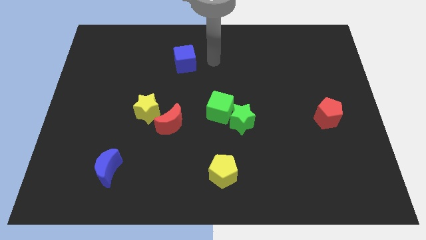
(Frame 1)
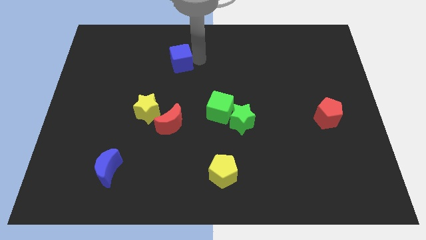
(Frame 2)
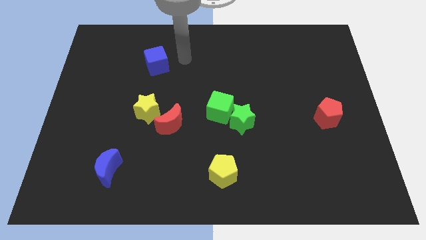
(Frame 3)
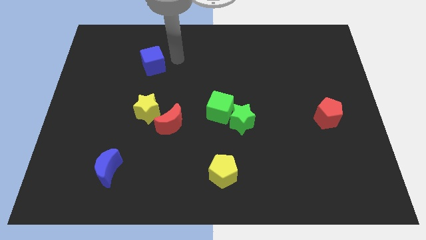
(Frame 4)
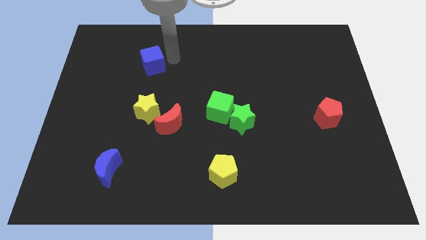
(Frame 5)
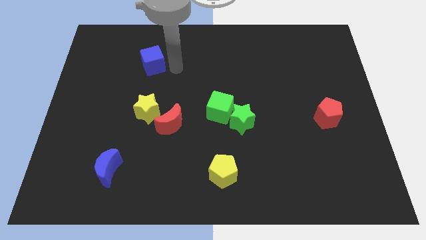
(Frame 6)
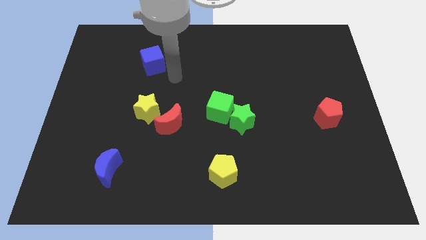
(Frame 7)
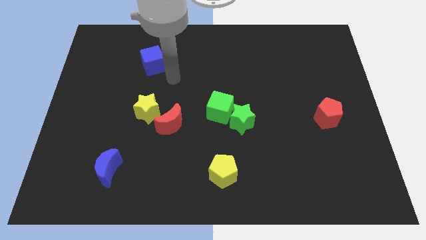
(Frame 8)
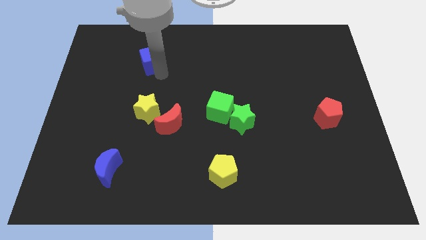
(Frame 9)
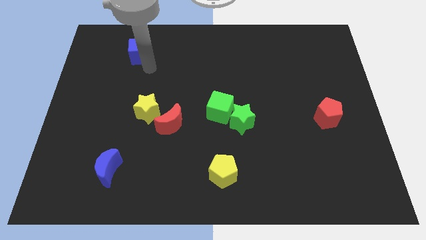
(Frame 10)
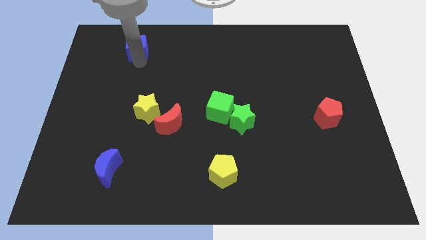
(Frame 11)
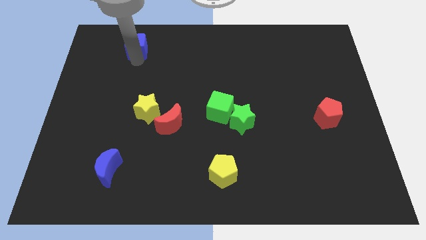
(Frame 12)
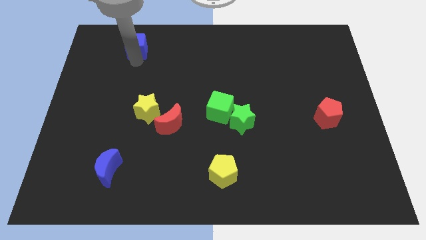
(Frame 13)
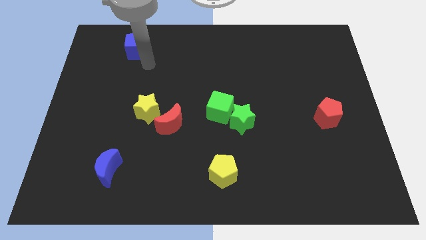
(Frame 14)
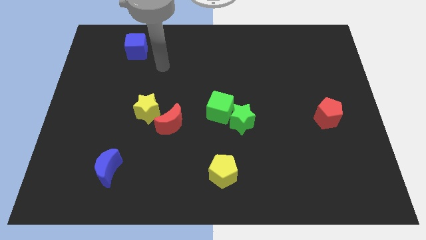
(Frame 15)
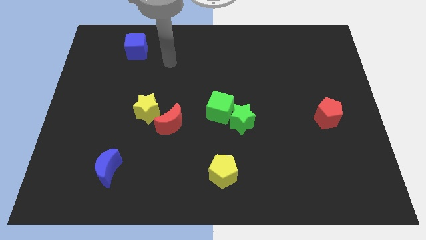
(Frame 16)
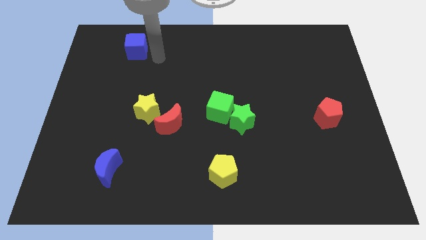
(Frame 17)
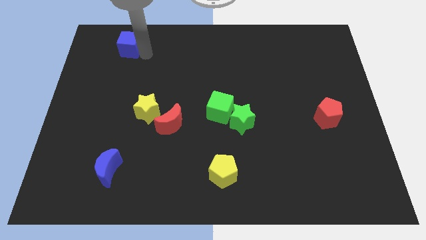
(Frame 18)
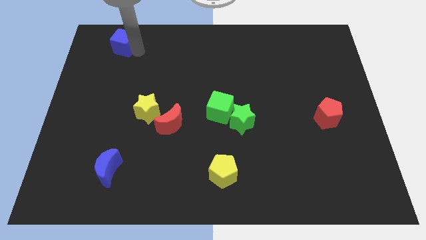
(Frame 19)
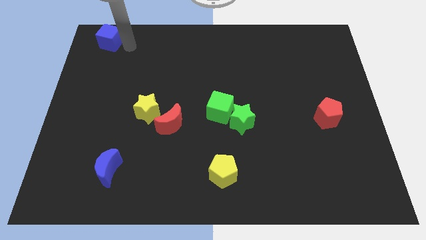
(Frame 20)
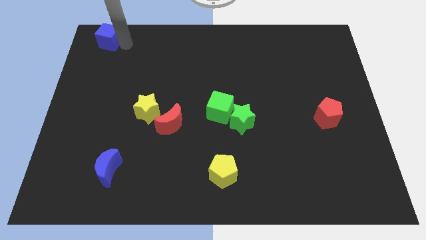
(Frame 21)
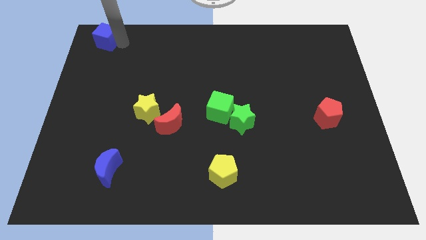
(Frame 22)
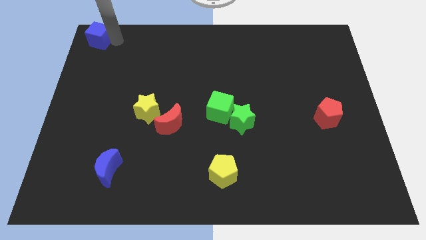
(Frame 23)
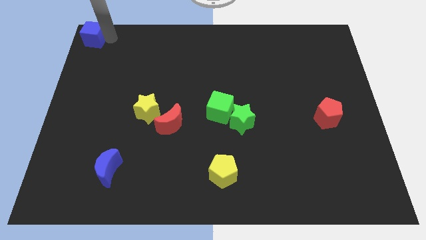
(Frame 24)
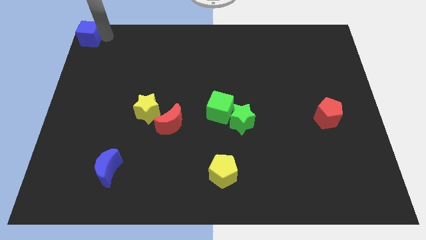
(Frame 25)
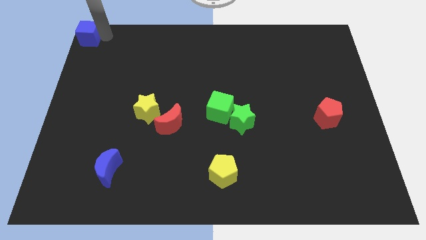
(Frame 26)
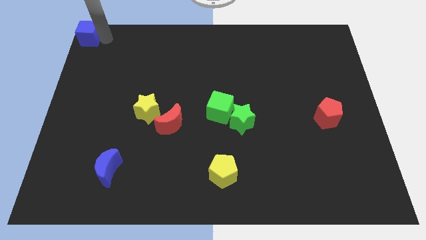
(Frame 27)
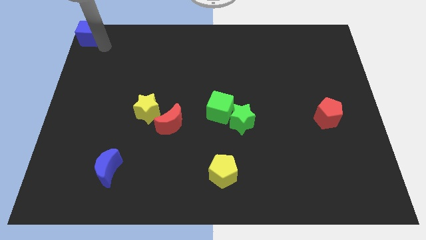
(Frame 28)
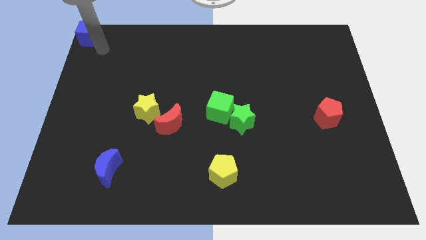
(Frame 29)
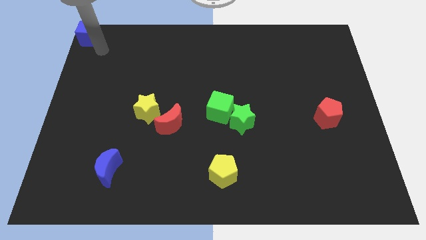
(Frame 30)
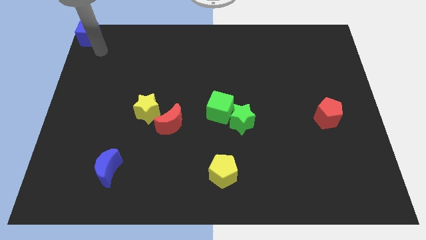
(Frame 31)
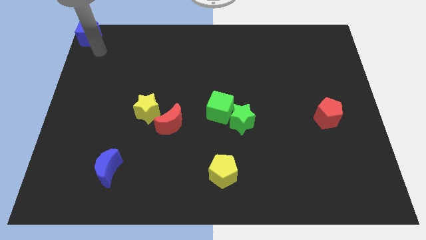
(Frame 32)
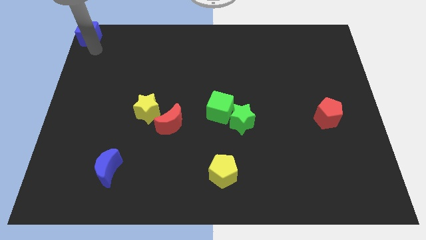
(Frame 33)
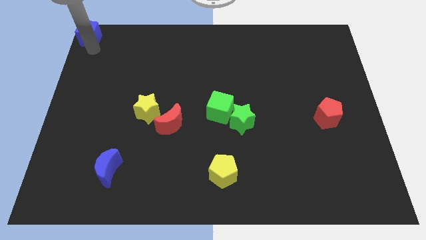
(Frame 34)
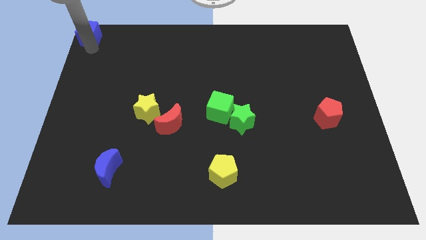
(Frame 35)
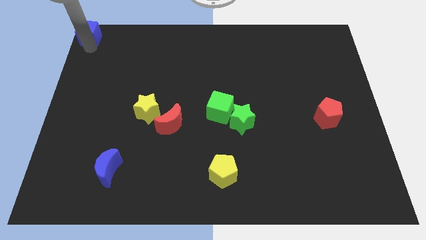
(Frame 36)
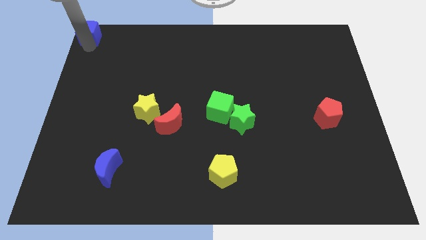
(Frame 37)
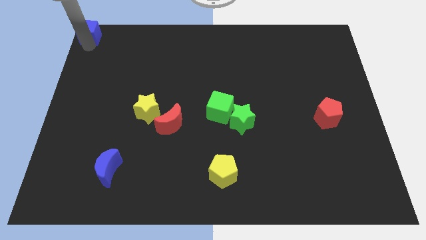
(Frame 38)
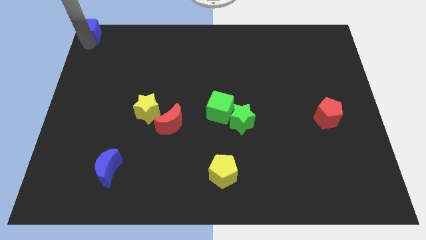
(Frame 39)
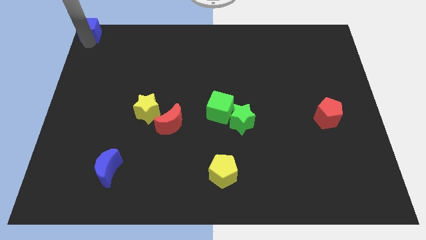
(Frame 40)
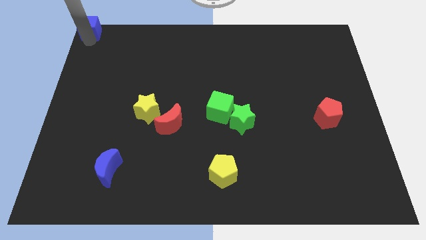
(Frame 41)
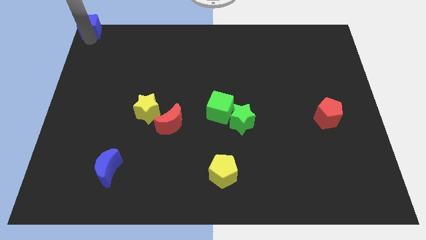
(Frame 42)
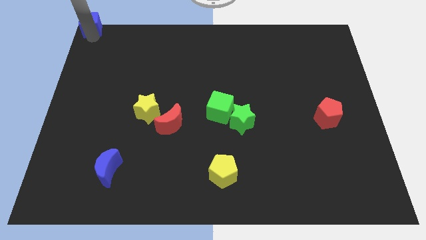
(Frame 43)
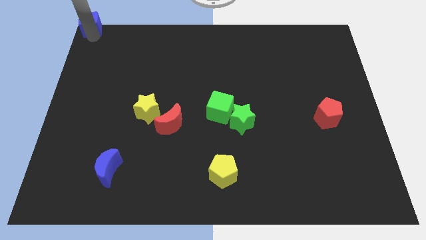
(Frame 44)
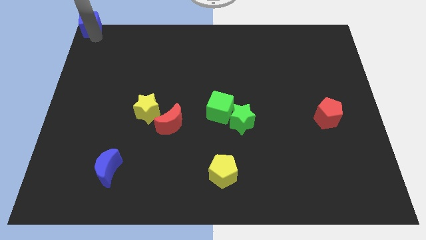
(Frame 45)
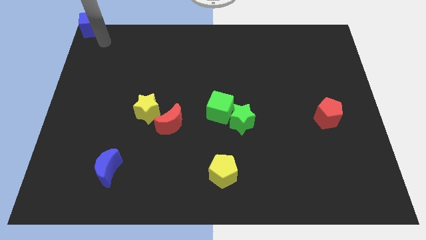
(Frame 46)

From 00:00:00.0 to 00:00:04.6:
place the blue cube at the top left corner of the board

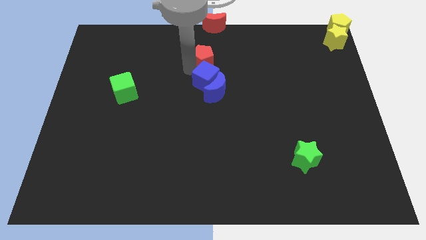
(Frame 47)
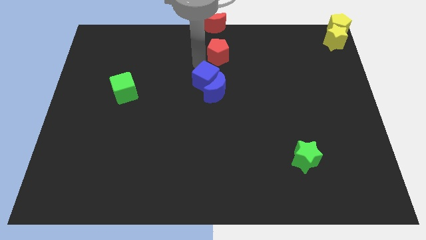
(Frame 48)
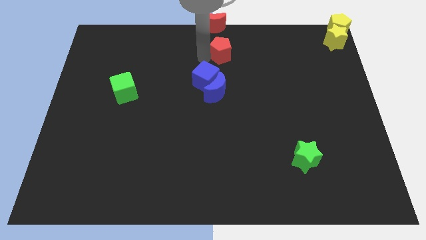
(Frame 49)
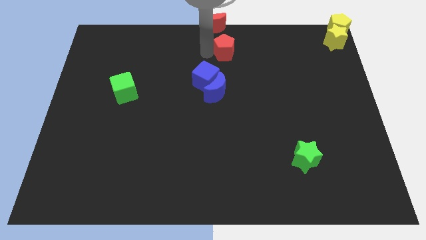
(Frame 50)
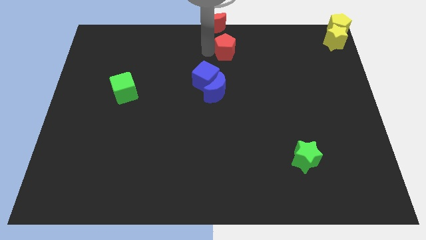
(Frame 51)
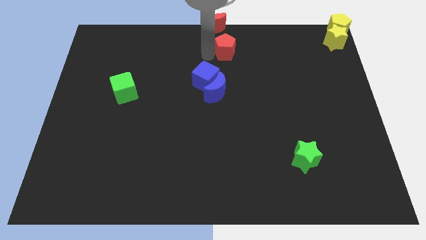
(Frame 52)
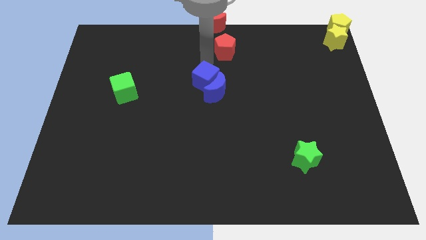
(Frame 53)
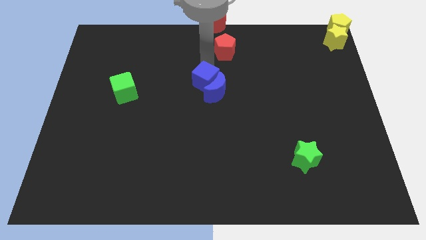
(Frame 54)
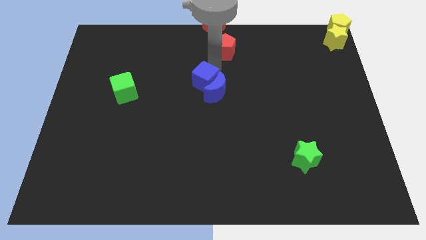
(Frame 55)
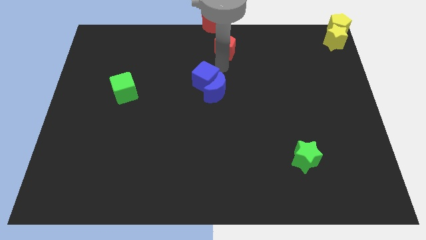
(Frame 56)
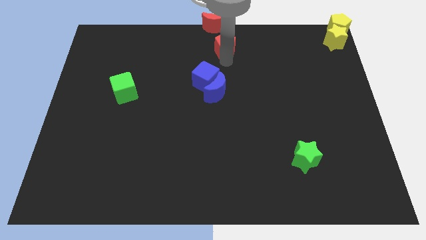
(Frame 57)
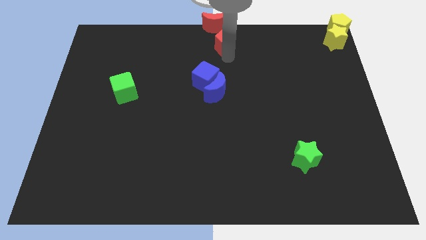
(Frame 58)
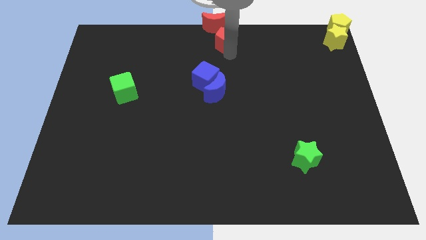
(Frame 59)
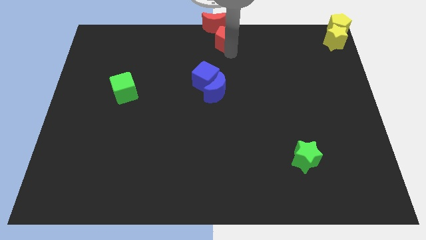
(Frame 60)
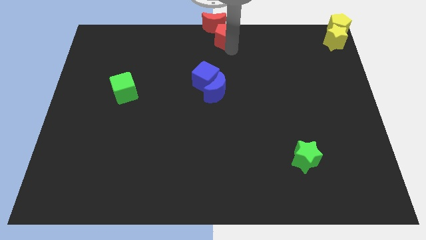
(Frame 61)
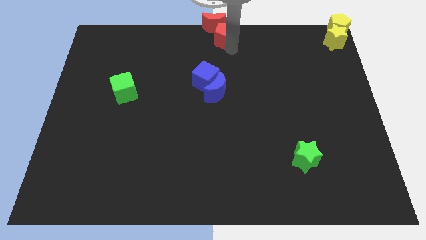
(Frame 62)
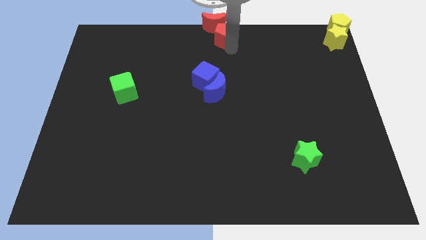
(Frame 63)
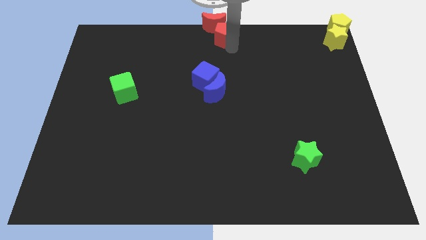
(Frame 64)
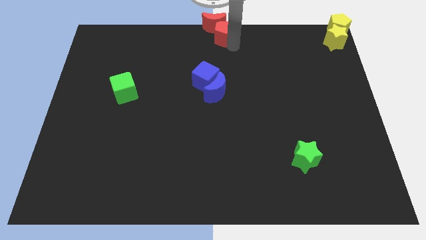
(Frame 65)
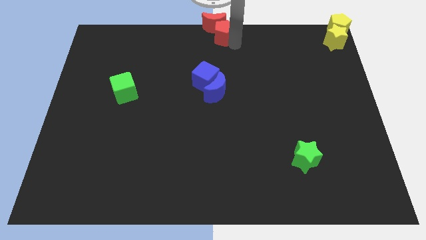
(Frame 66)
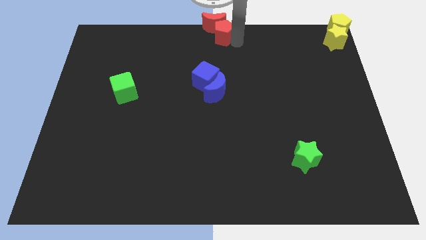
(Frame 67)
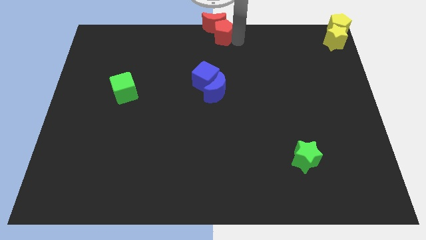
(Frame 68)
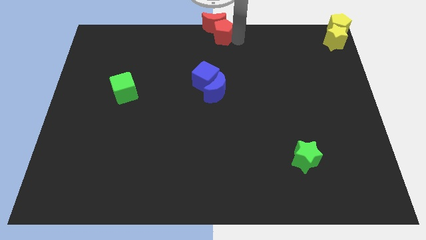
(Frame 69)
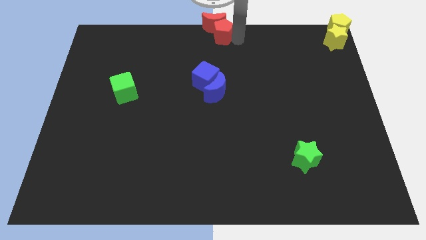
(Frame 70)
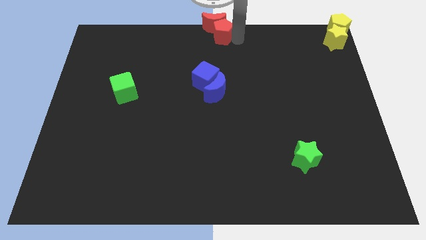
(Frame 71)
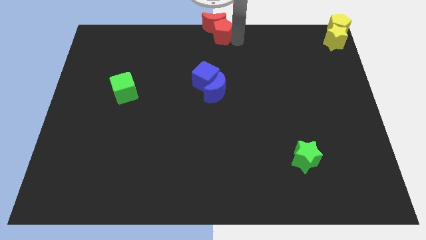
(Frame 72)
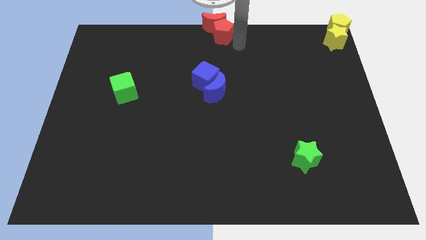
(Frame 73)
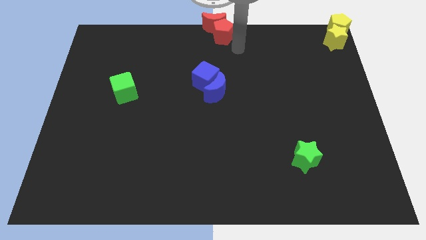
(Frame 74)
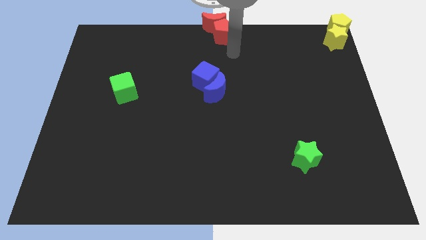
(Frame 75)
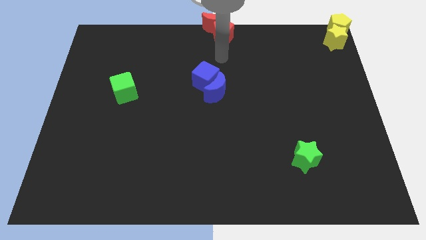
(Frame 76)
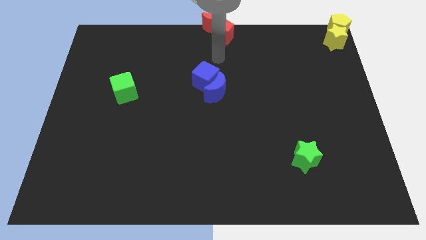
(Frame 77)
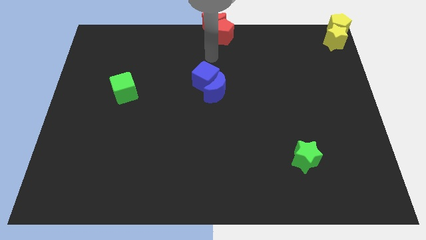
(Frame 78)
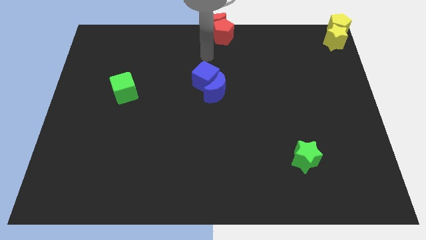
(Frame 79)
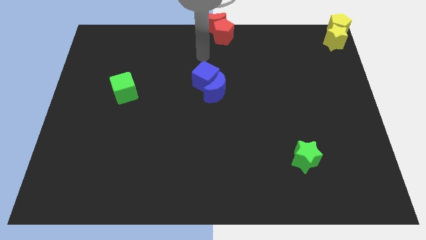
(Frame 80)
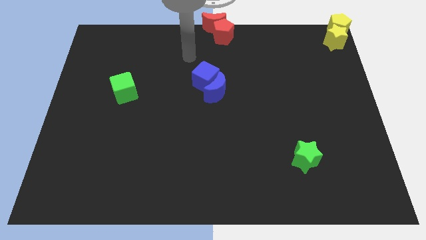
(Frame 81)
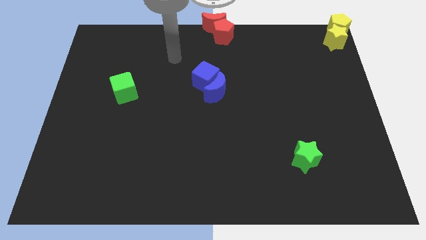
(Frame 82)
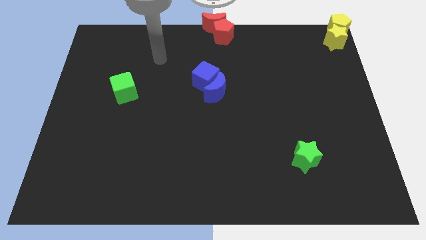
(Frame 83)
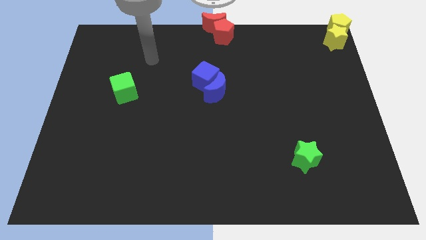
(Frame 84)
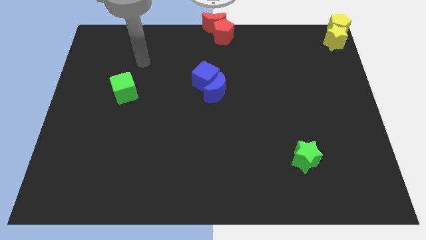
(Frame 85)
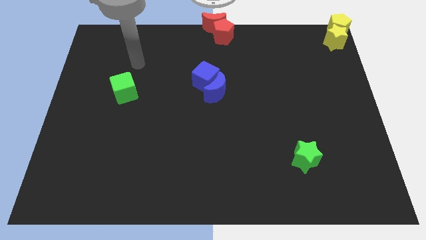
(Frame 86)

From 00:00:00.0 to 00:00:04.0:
move the red pentagon into the red moon

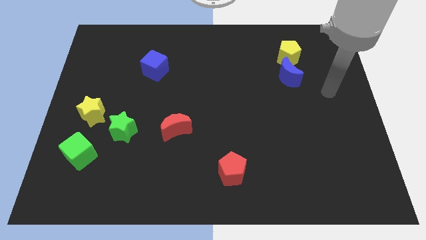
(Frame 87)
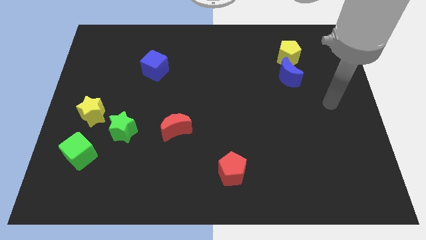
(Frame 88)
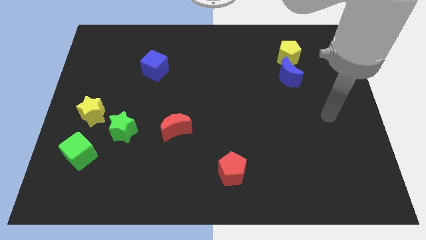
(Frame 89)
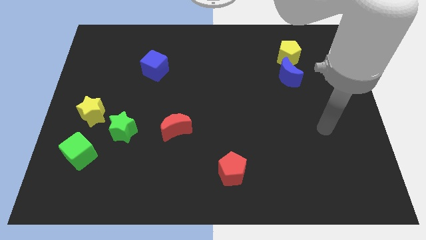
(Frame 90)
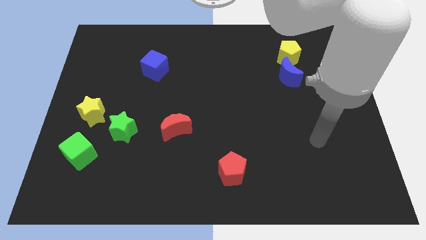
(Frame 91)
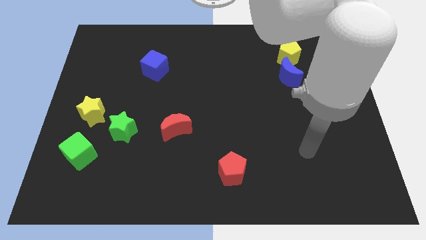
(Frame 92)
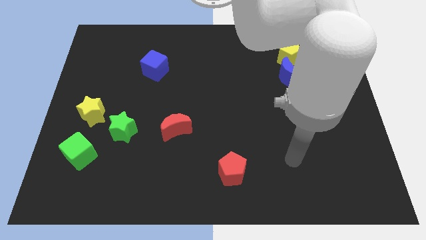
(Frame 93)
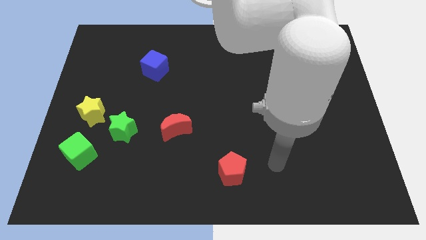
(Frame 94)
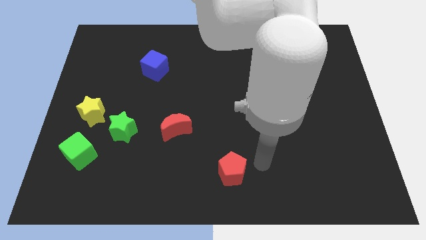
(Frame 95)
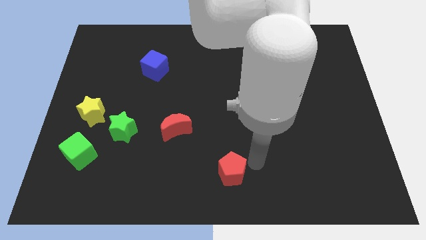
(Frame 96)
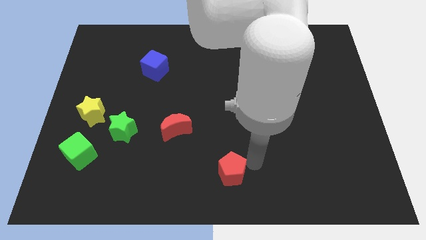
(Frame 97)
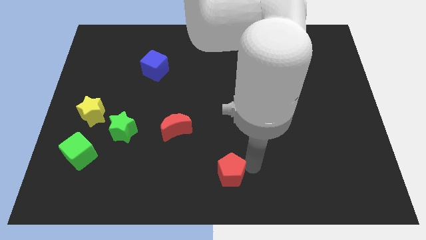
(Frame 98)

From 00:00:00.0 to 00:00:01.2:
move your arm to the top right of the red pentagon
